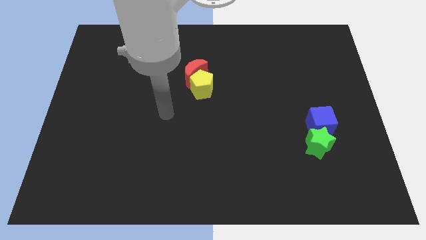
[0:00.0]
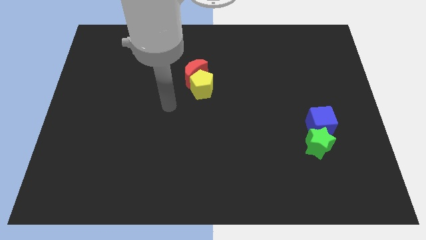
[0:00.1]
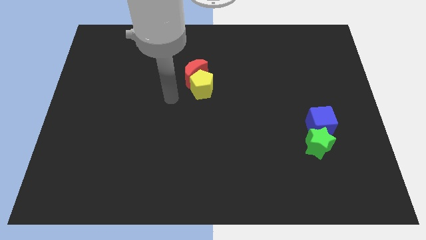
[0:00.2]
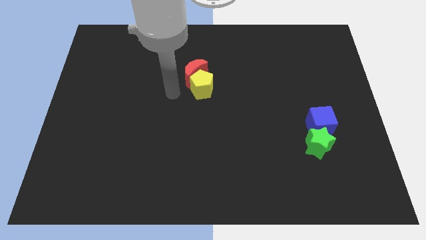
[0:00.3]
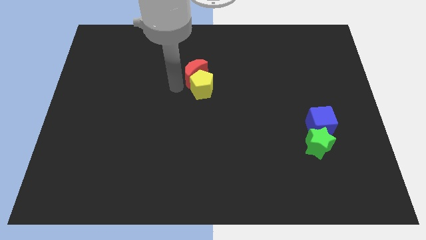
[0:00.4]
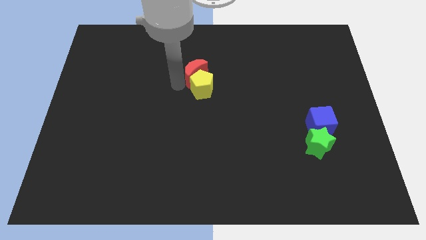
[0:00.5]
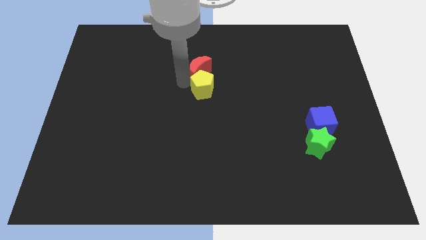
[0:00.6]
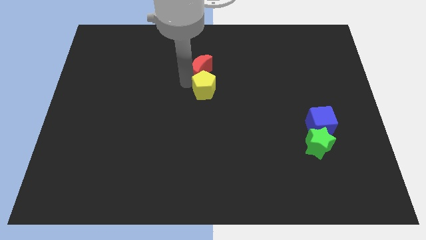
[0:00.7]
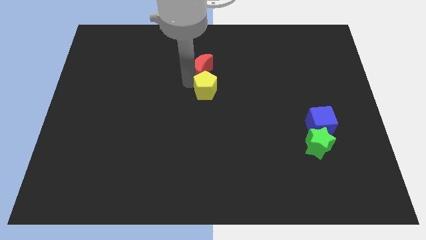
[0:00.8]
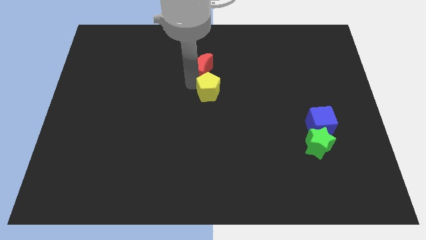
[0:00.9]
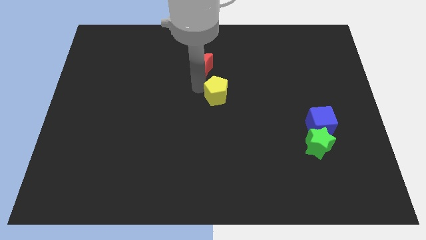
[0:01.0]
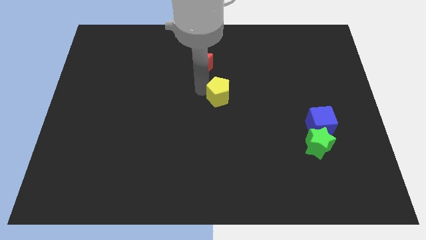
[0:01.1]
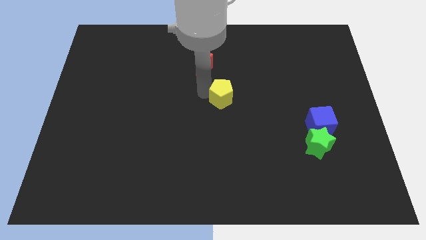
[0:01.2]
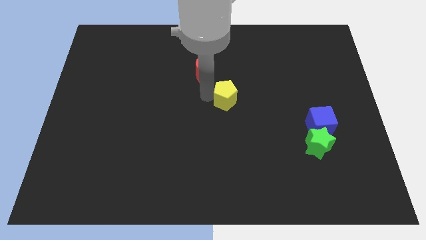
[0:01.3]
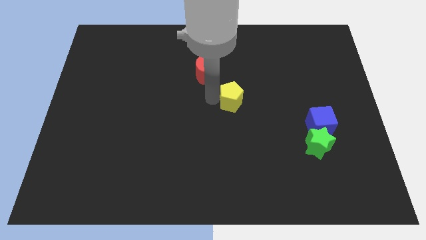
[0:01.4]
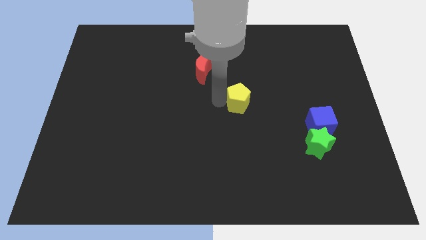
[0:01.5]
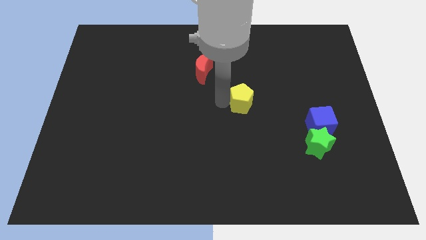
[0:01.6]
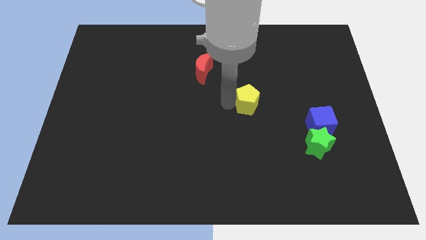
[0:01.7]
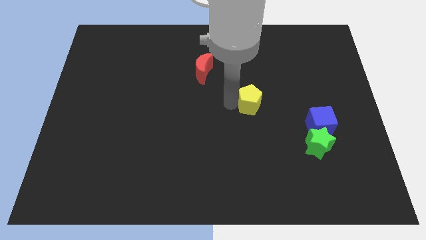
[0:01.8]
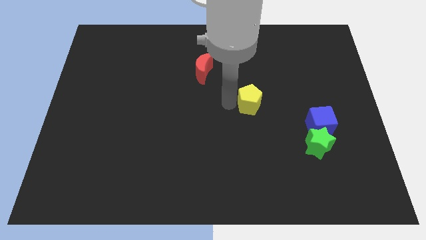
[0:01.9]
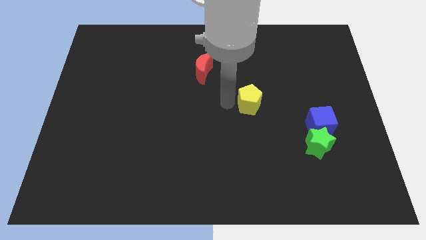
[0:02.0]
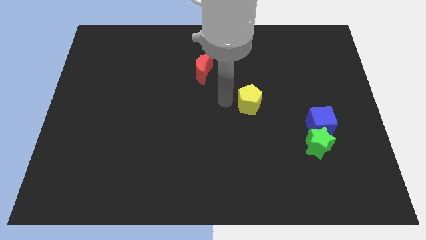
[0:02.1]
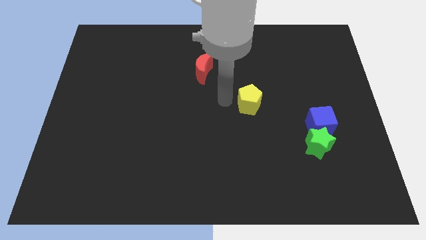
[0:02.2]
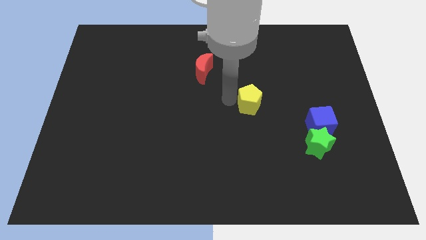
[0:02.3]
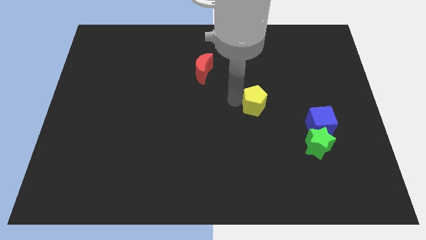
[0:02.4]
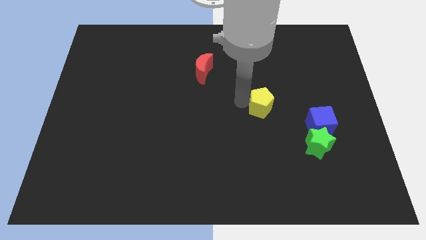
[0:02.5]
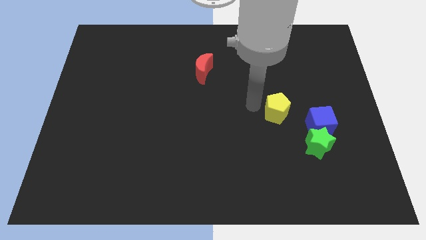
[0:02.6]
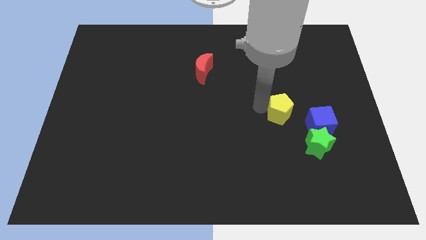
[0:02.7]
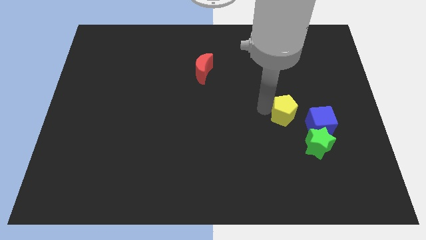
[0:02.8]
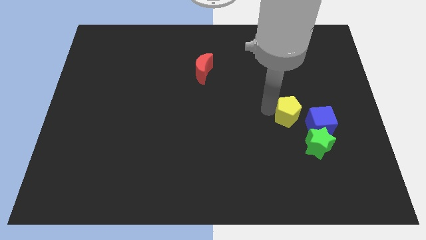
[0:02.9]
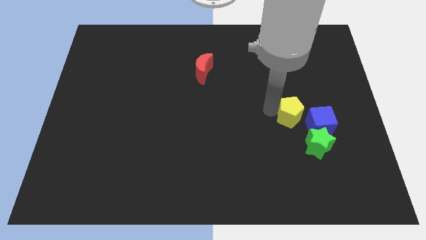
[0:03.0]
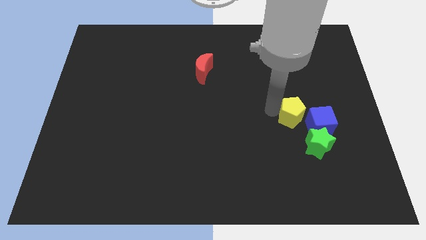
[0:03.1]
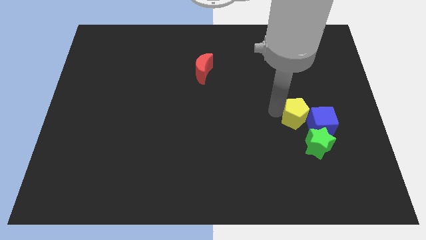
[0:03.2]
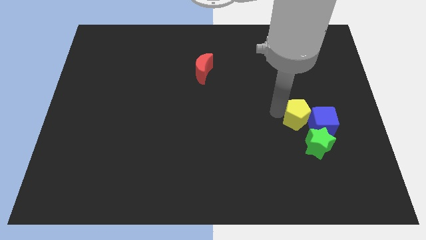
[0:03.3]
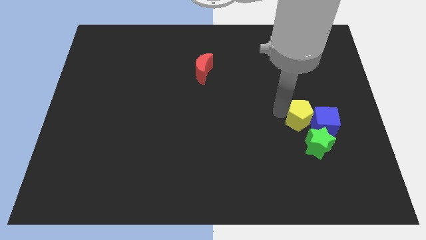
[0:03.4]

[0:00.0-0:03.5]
move the pentagon next to the blue cube

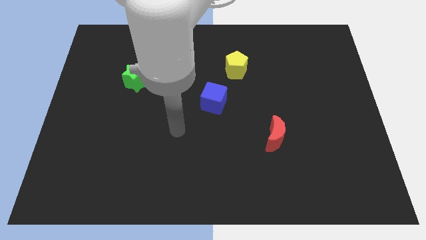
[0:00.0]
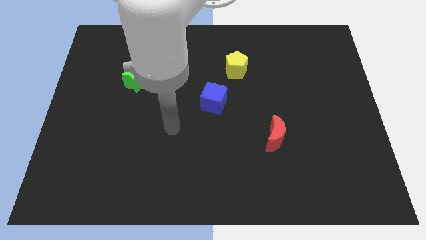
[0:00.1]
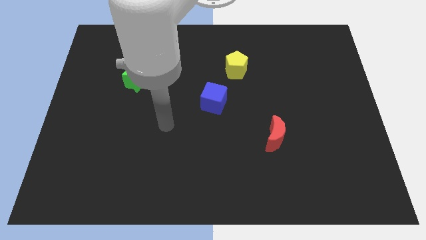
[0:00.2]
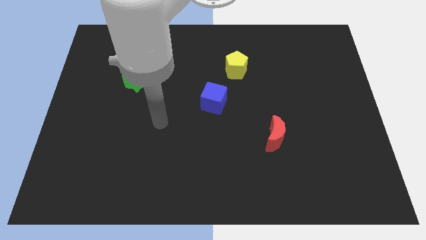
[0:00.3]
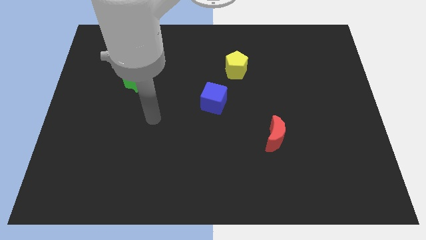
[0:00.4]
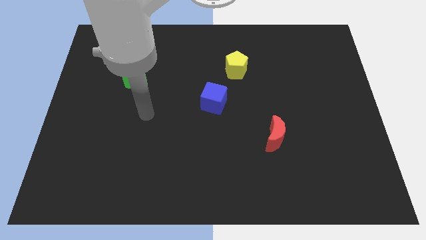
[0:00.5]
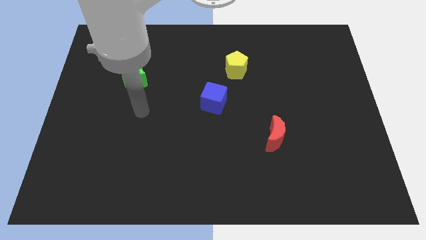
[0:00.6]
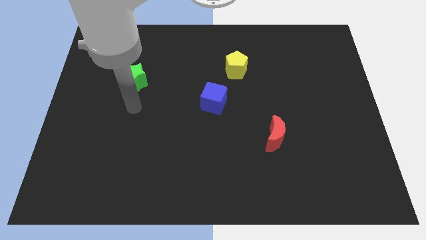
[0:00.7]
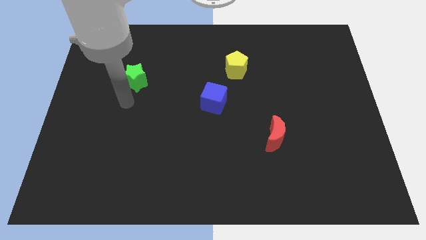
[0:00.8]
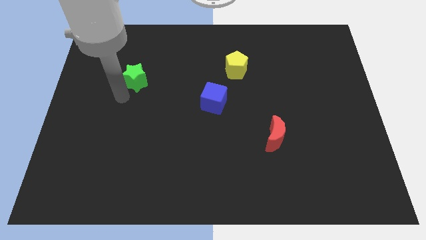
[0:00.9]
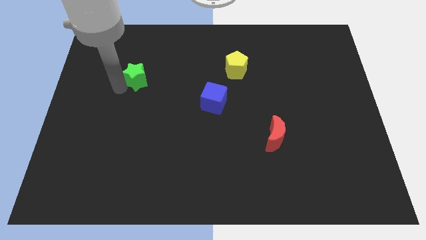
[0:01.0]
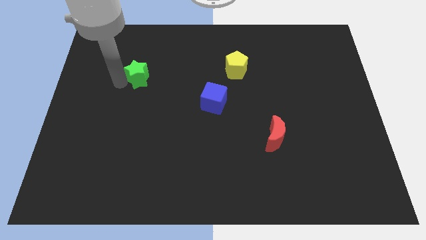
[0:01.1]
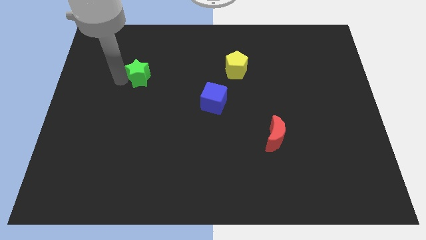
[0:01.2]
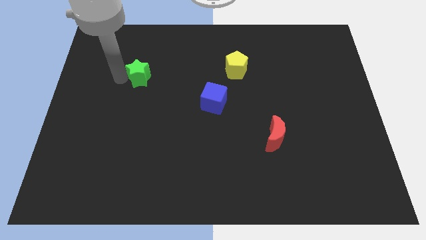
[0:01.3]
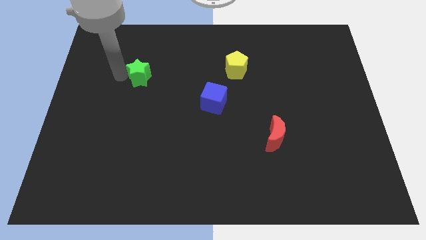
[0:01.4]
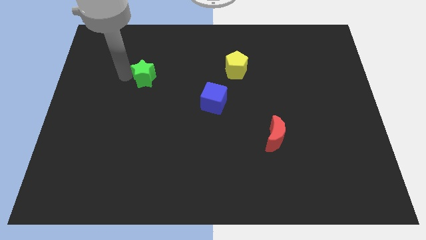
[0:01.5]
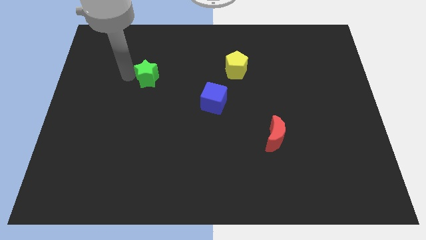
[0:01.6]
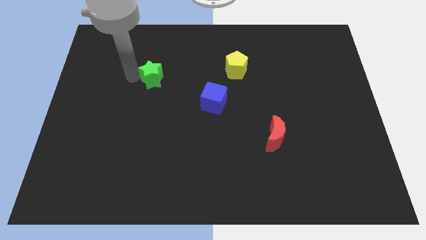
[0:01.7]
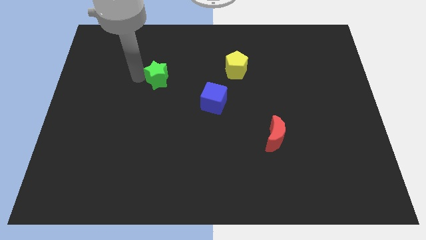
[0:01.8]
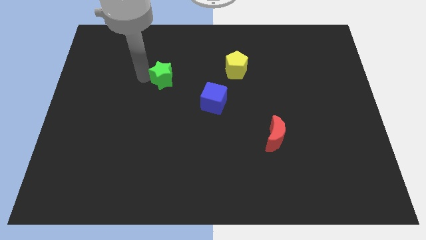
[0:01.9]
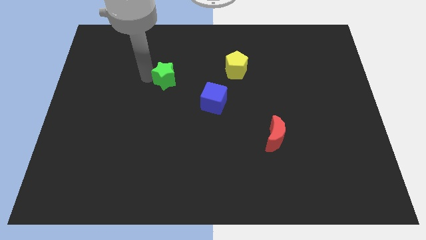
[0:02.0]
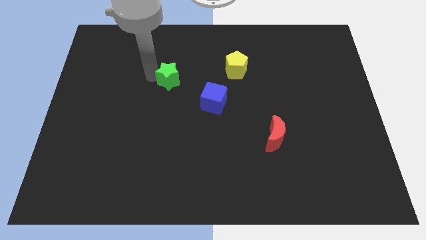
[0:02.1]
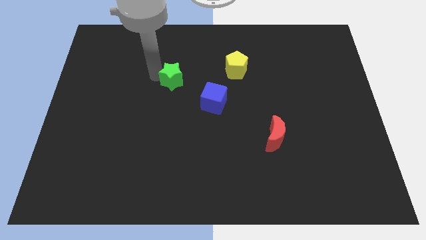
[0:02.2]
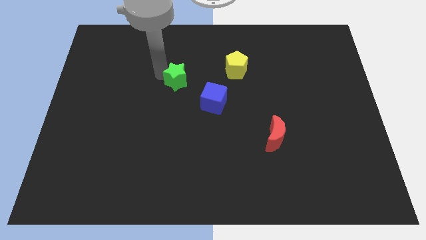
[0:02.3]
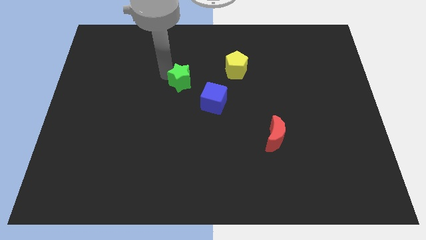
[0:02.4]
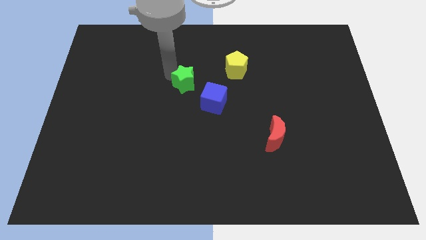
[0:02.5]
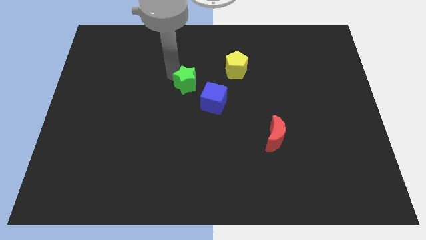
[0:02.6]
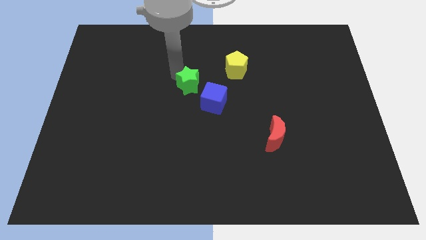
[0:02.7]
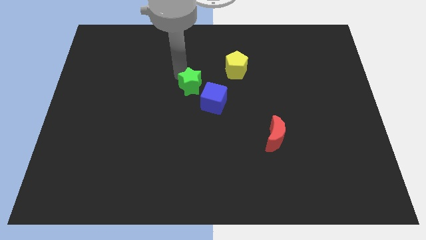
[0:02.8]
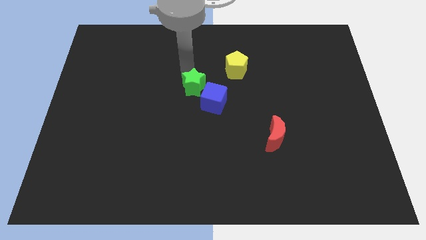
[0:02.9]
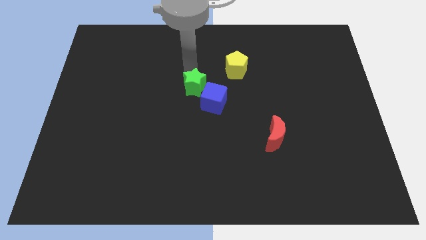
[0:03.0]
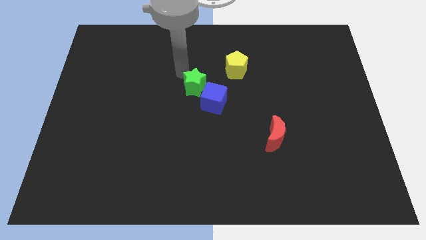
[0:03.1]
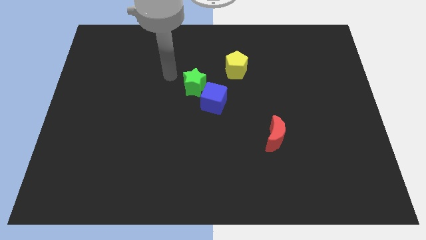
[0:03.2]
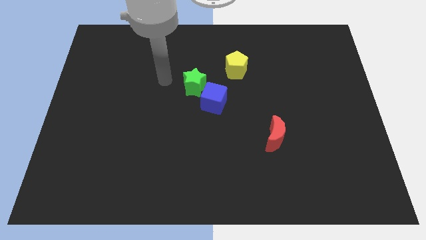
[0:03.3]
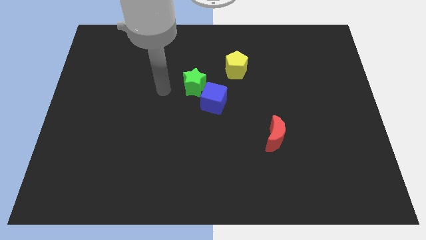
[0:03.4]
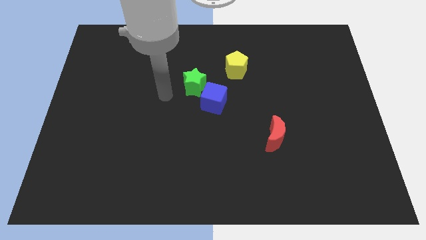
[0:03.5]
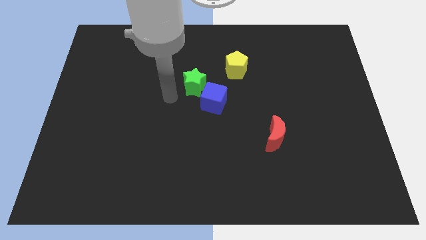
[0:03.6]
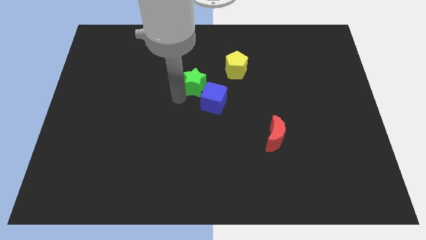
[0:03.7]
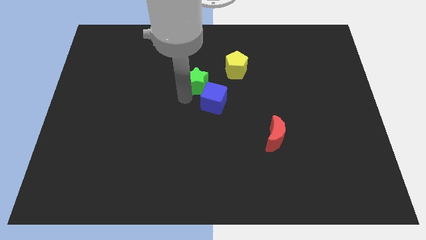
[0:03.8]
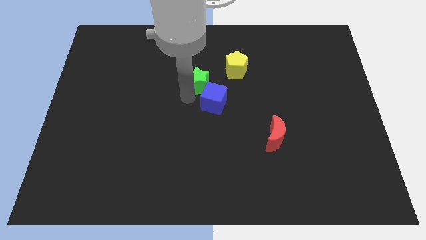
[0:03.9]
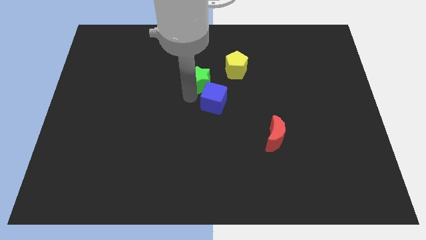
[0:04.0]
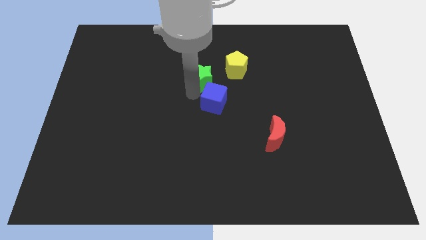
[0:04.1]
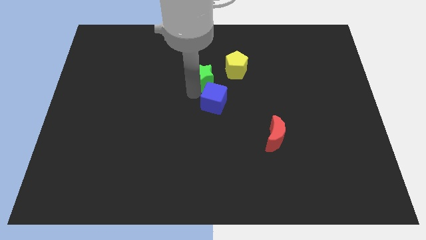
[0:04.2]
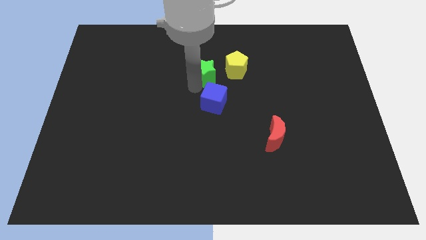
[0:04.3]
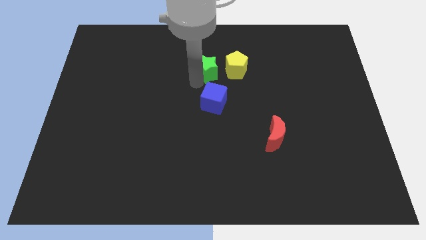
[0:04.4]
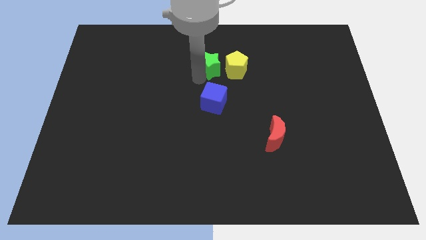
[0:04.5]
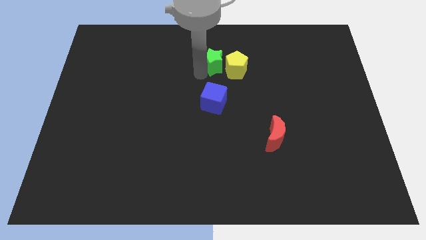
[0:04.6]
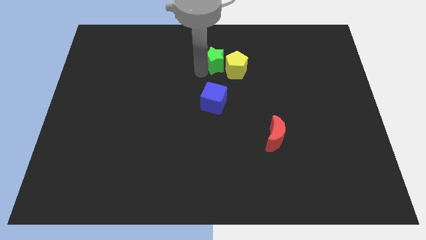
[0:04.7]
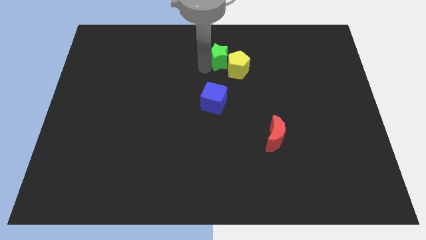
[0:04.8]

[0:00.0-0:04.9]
move the green star next to the yellow pentagon

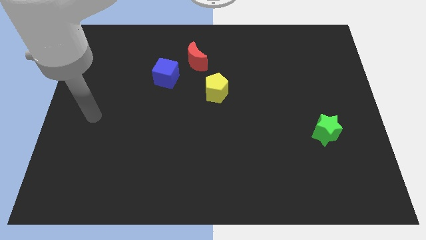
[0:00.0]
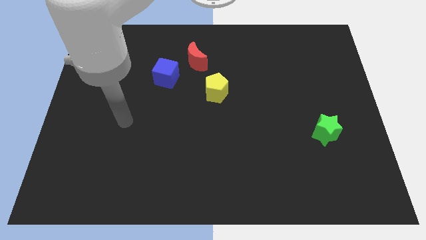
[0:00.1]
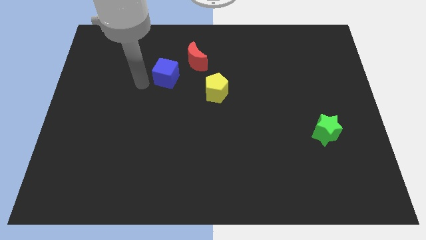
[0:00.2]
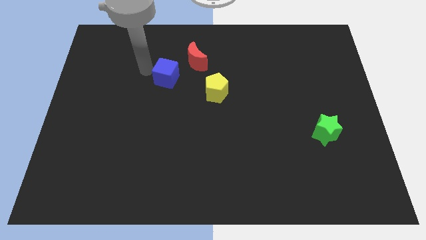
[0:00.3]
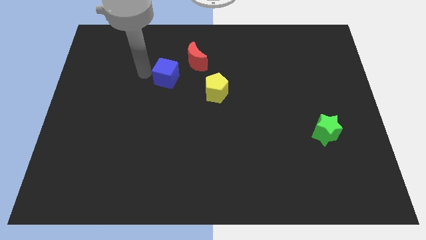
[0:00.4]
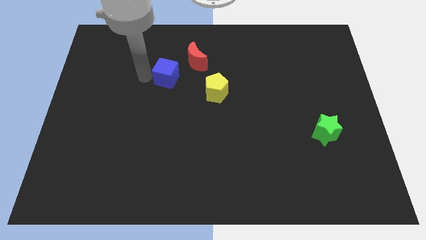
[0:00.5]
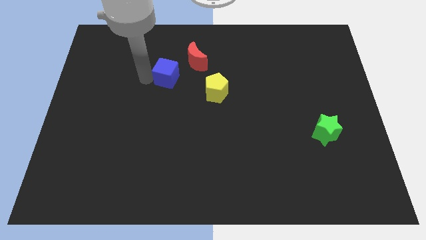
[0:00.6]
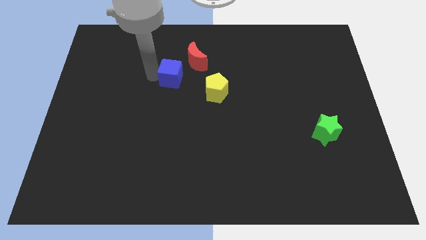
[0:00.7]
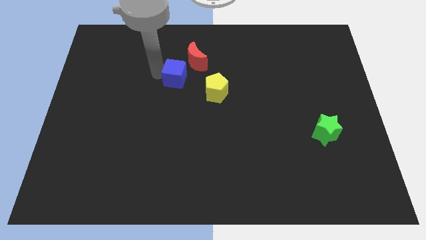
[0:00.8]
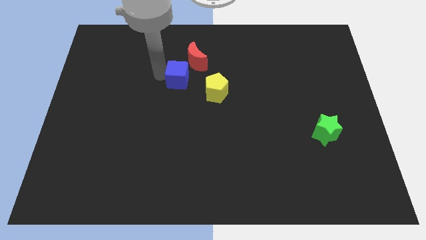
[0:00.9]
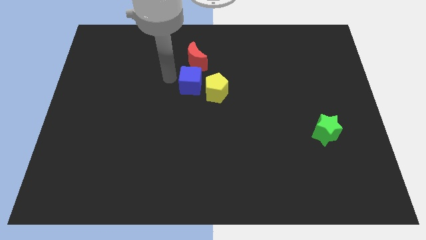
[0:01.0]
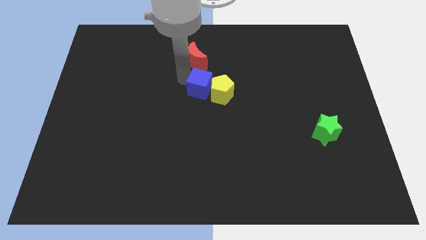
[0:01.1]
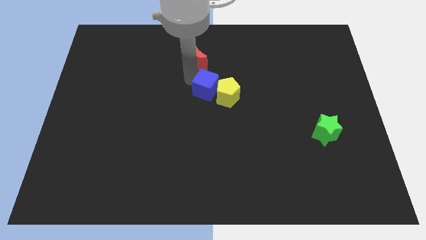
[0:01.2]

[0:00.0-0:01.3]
push the cube next to the yellow pentagon
